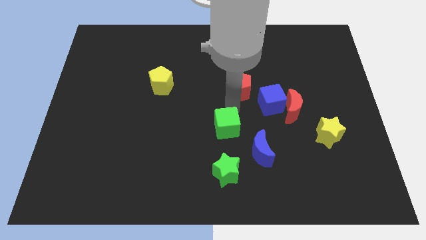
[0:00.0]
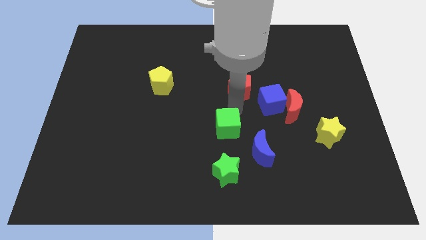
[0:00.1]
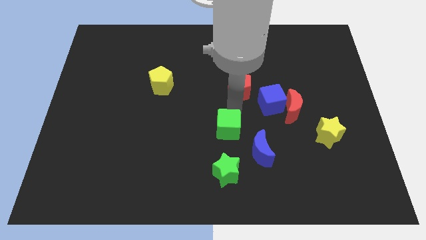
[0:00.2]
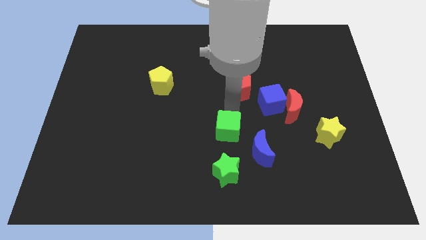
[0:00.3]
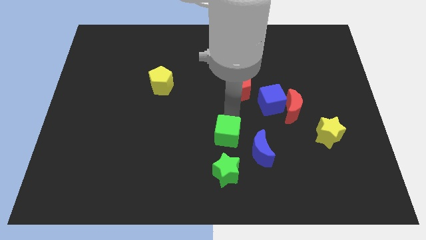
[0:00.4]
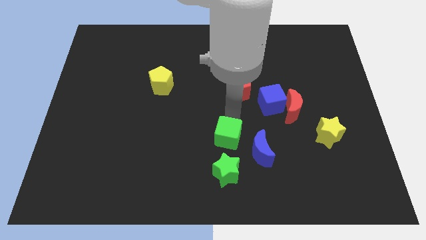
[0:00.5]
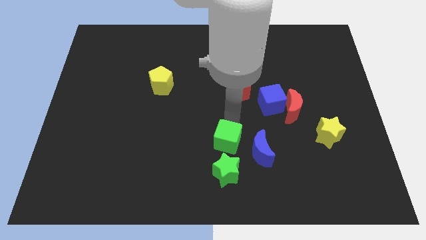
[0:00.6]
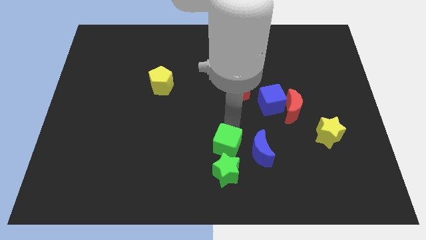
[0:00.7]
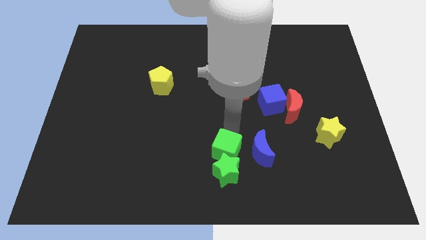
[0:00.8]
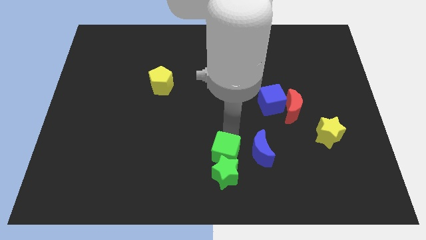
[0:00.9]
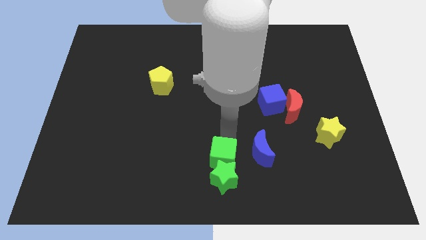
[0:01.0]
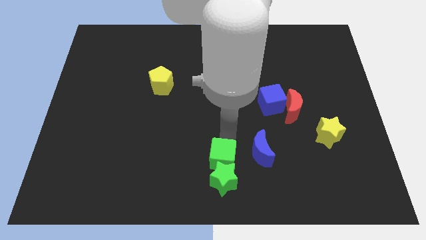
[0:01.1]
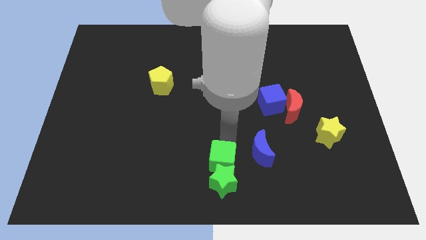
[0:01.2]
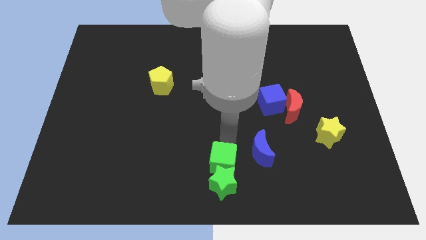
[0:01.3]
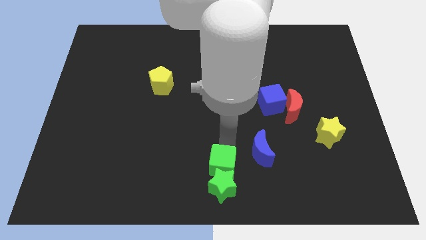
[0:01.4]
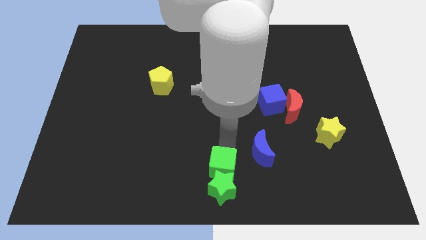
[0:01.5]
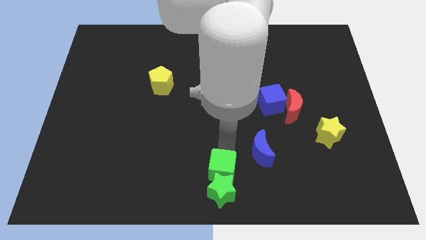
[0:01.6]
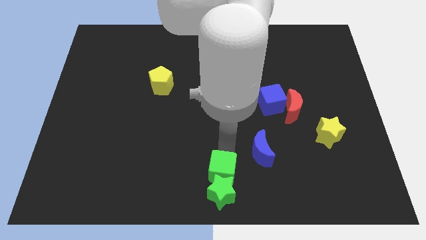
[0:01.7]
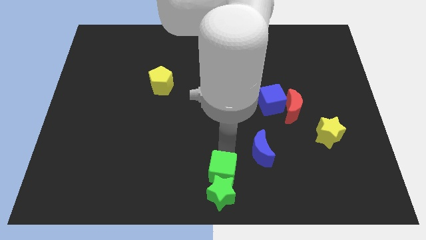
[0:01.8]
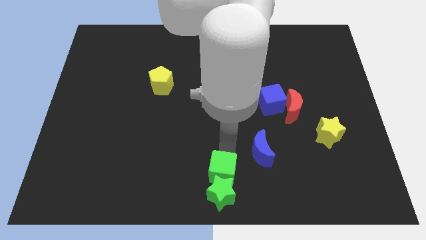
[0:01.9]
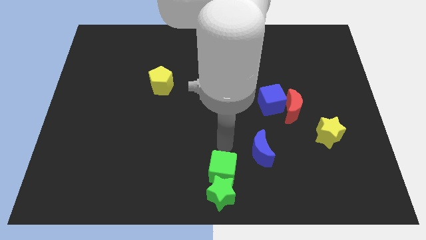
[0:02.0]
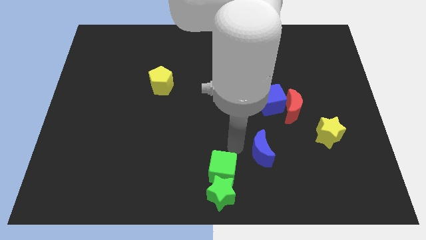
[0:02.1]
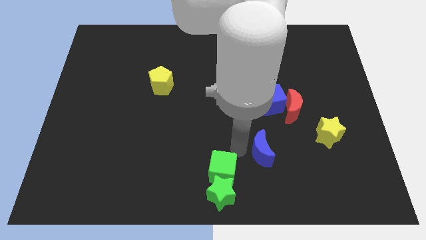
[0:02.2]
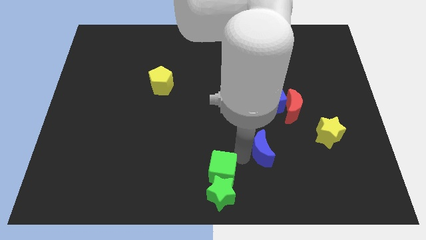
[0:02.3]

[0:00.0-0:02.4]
push the green cube towards green star

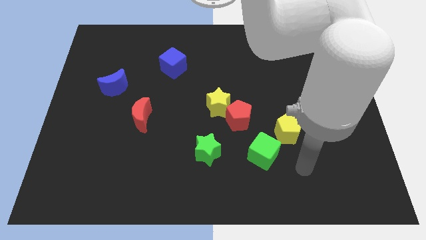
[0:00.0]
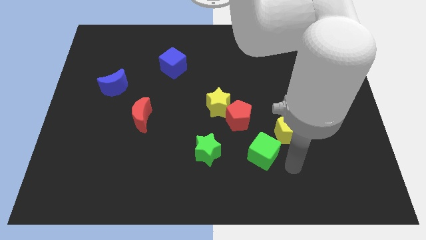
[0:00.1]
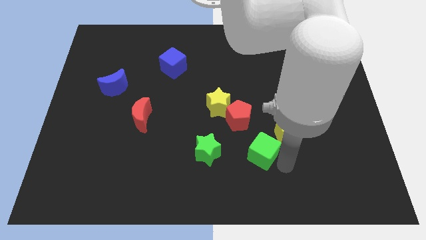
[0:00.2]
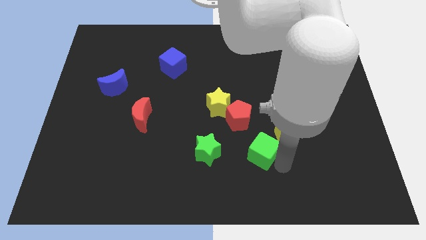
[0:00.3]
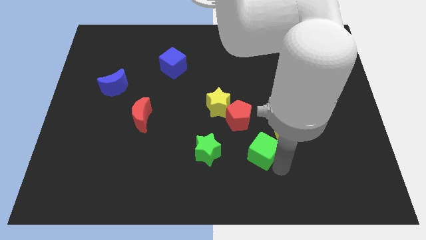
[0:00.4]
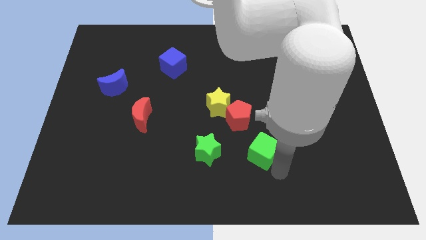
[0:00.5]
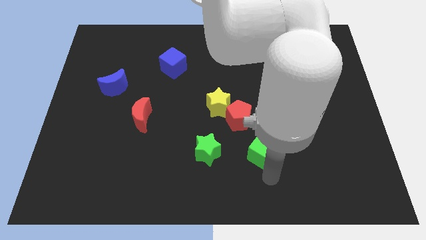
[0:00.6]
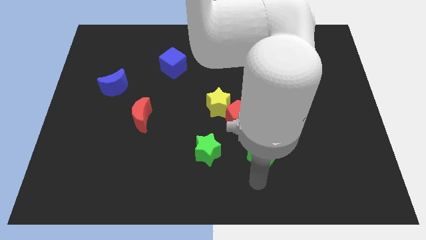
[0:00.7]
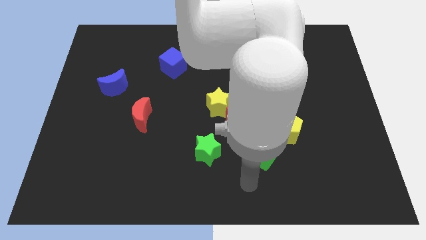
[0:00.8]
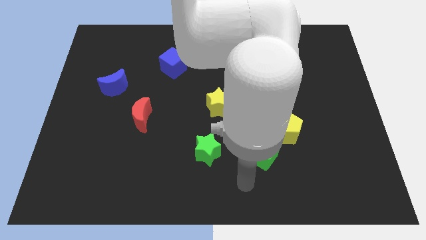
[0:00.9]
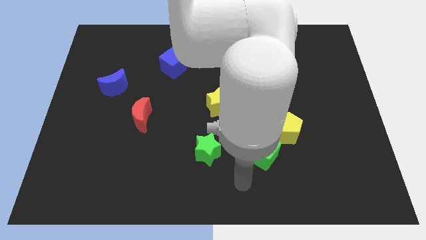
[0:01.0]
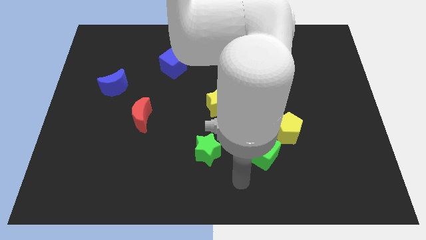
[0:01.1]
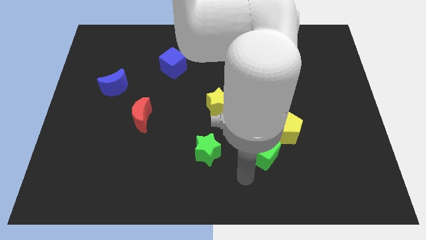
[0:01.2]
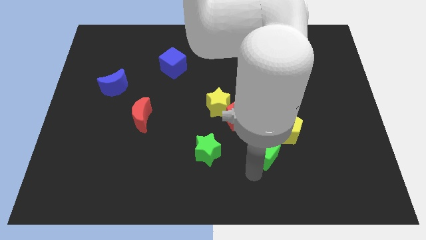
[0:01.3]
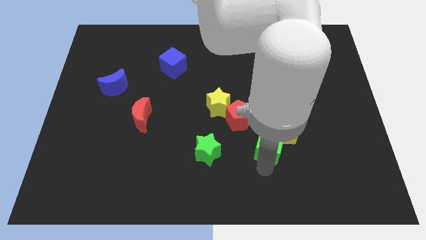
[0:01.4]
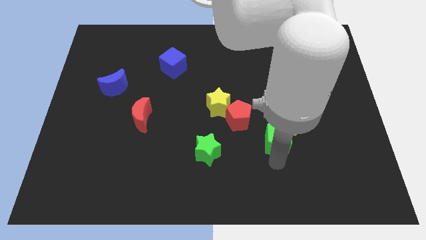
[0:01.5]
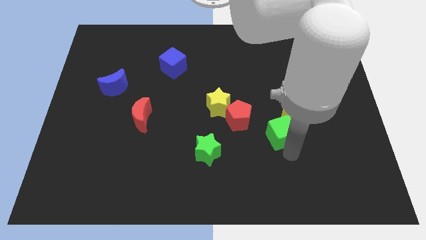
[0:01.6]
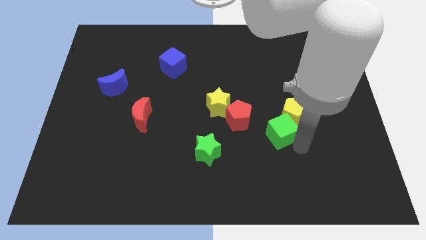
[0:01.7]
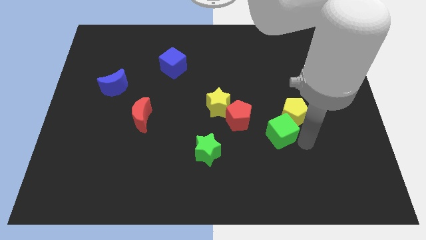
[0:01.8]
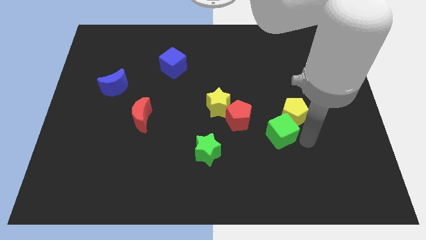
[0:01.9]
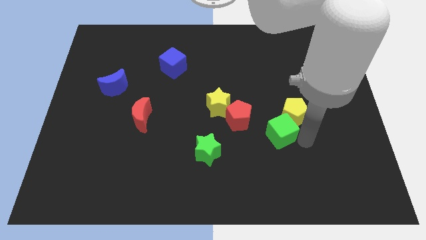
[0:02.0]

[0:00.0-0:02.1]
push the green cube into the yellow pentagon

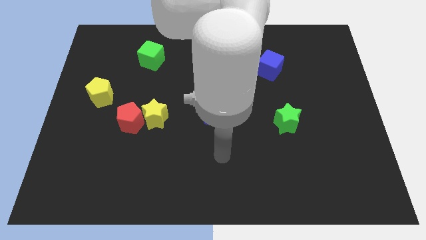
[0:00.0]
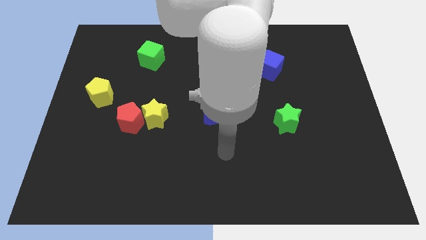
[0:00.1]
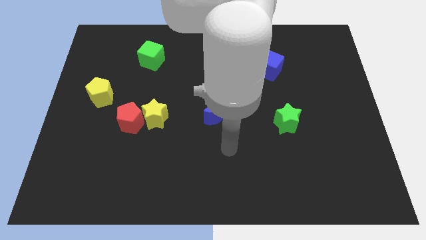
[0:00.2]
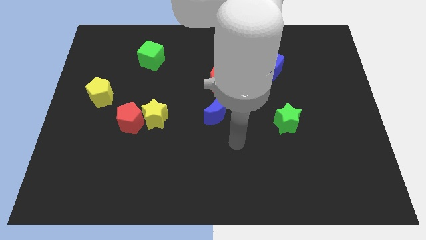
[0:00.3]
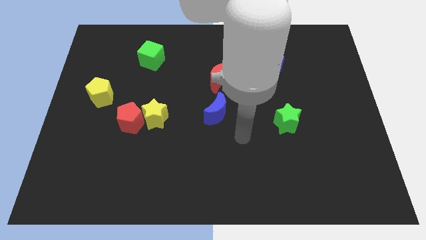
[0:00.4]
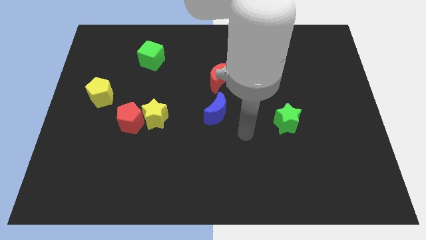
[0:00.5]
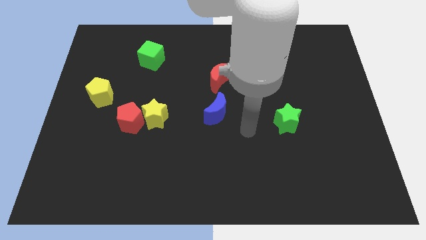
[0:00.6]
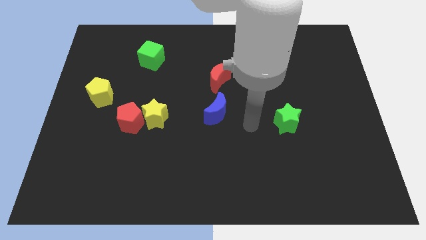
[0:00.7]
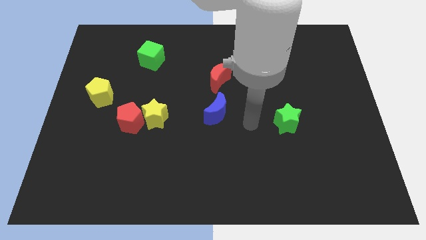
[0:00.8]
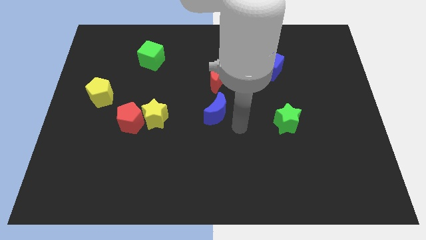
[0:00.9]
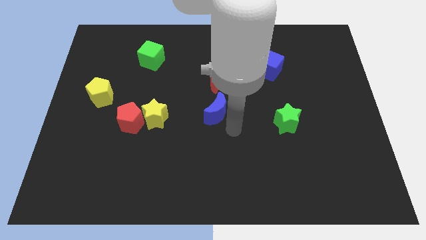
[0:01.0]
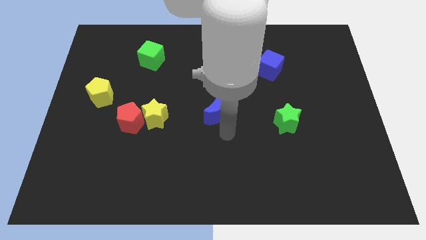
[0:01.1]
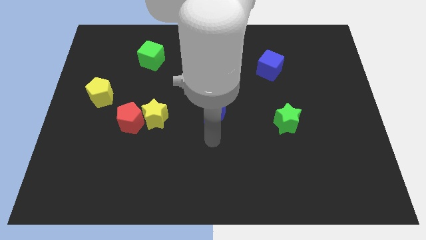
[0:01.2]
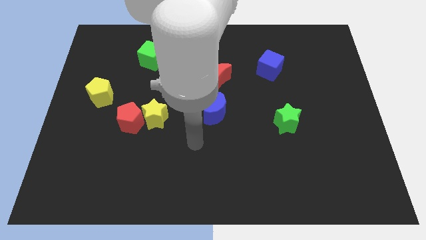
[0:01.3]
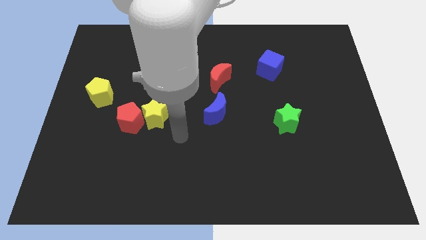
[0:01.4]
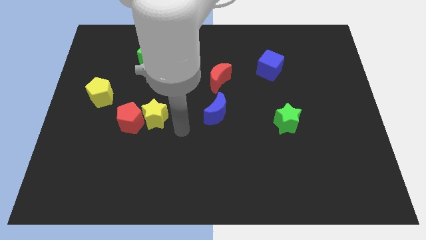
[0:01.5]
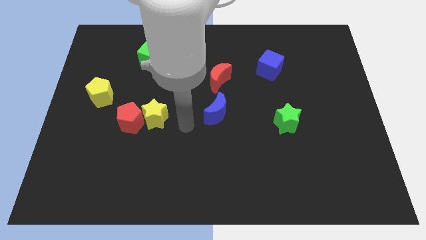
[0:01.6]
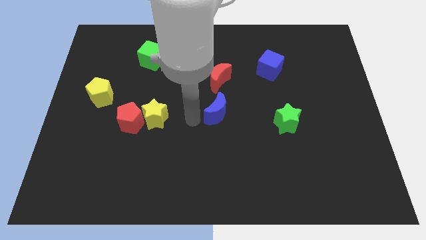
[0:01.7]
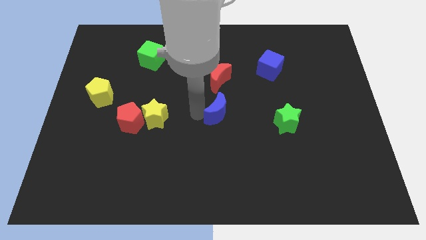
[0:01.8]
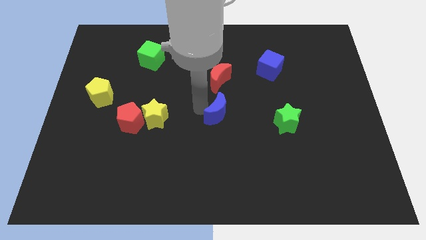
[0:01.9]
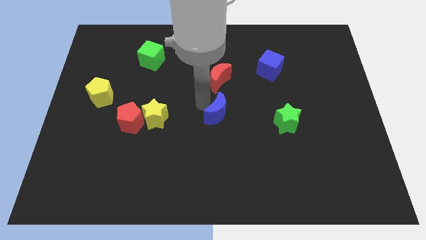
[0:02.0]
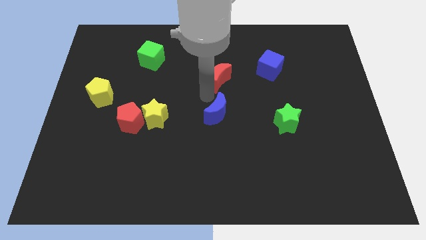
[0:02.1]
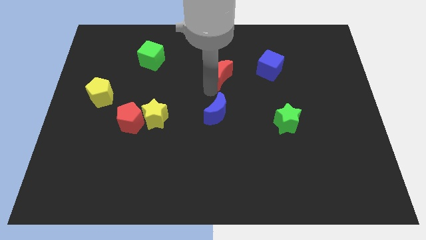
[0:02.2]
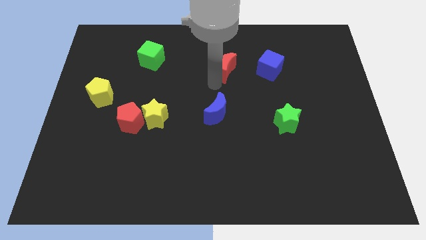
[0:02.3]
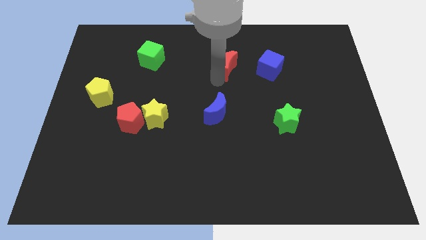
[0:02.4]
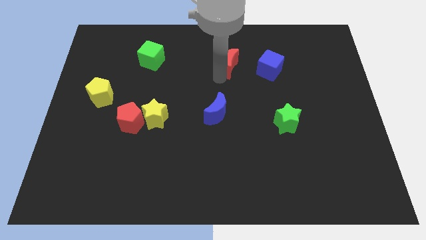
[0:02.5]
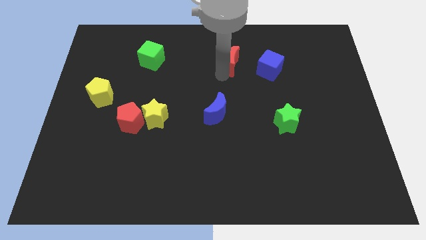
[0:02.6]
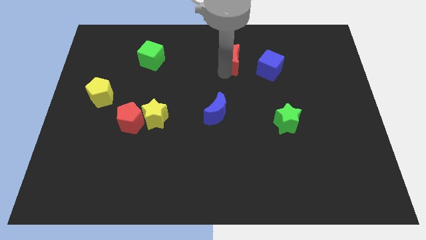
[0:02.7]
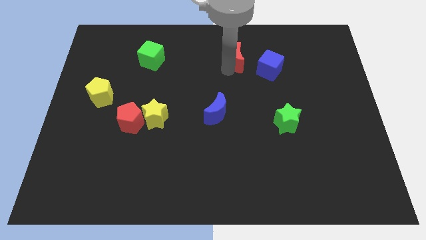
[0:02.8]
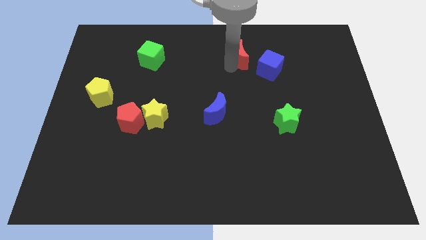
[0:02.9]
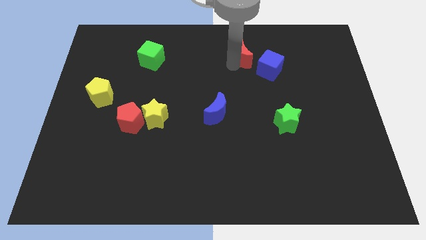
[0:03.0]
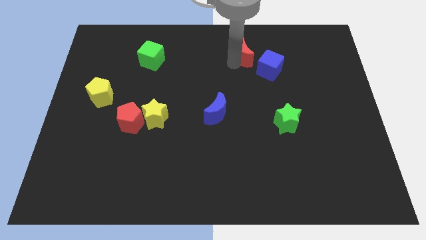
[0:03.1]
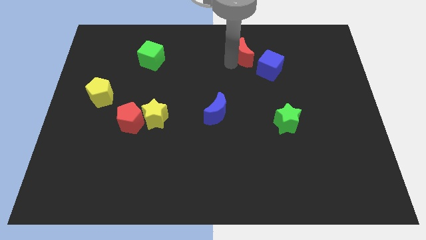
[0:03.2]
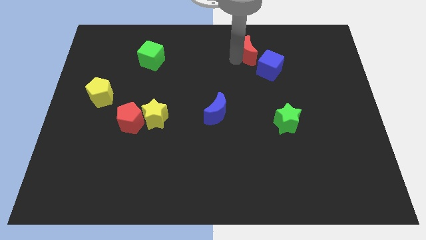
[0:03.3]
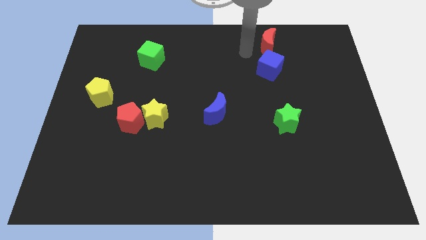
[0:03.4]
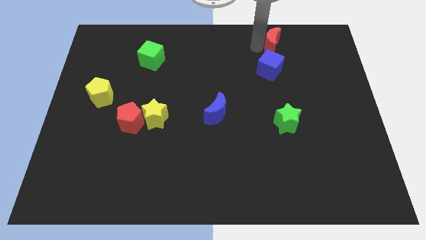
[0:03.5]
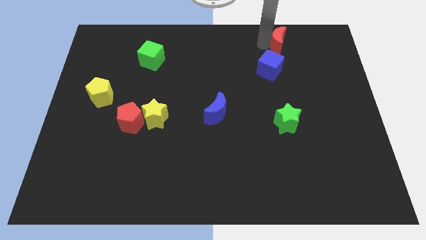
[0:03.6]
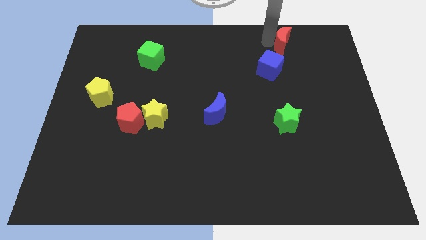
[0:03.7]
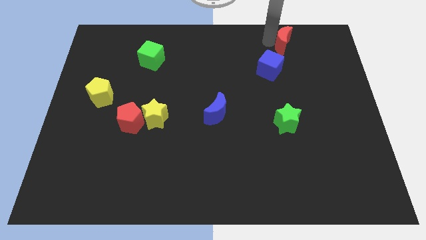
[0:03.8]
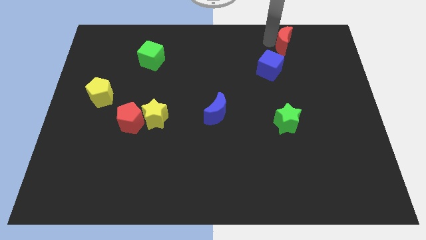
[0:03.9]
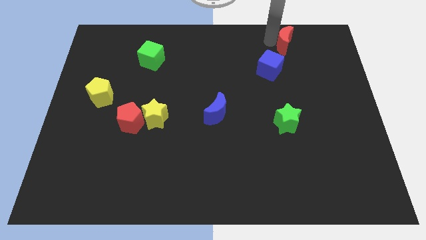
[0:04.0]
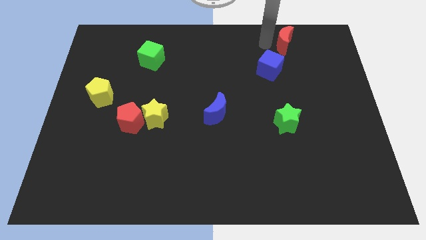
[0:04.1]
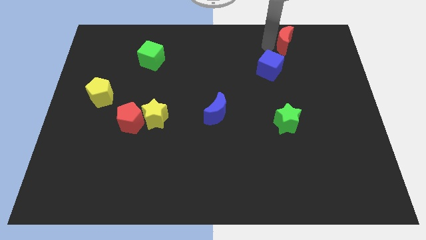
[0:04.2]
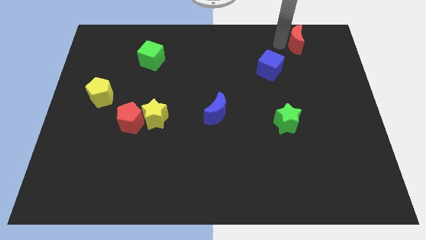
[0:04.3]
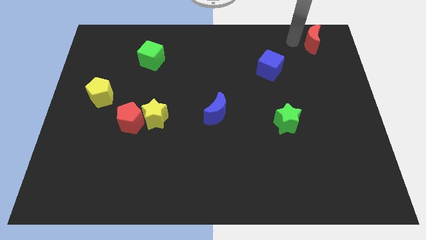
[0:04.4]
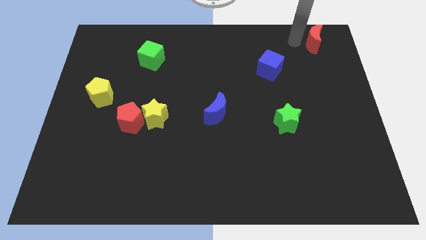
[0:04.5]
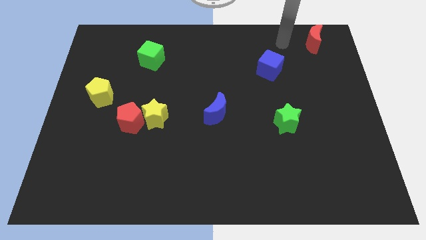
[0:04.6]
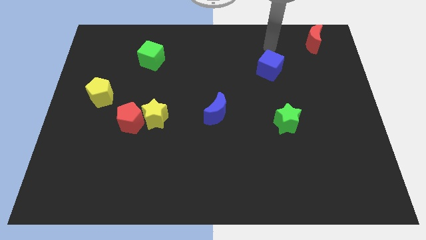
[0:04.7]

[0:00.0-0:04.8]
move the red moon to the top right
